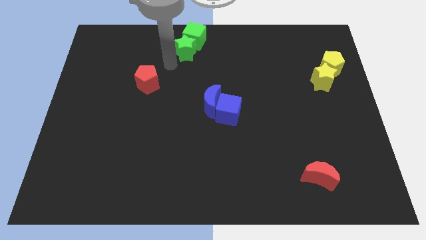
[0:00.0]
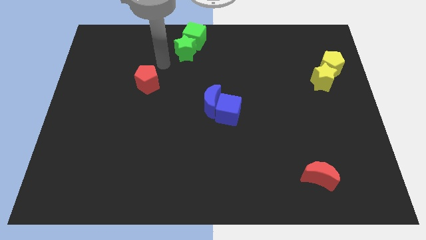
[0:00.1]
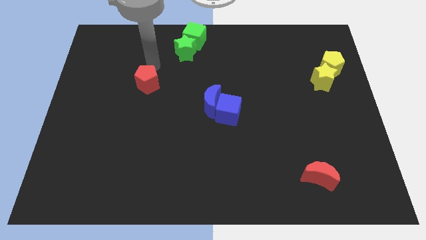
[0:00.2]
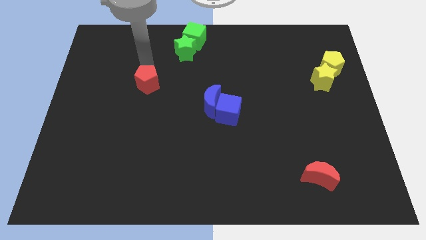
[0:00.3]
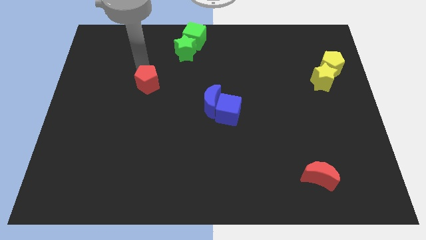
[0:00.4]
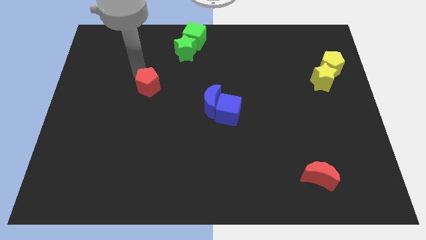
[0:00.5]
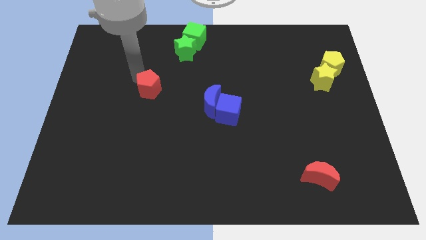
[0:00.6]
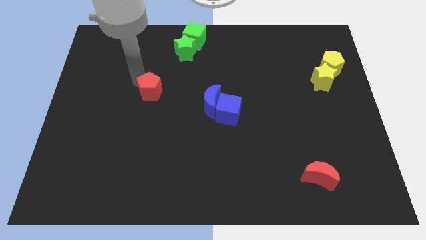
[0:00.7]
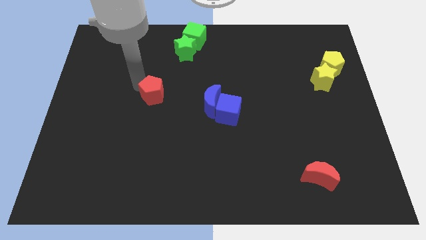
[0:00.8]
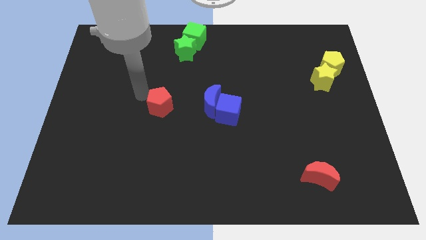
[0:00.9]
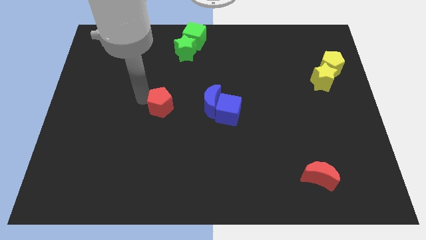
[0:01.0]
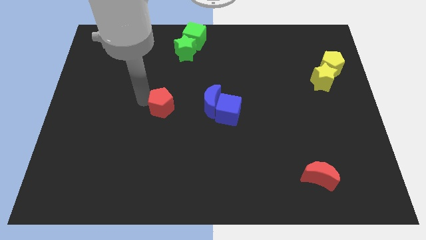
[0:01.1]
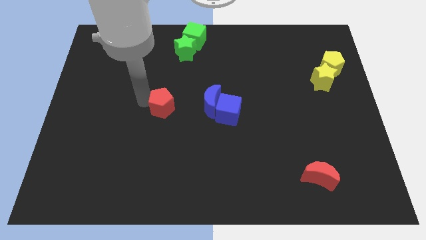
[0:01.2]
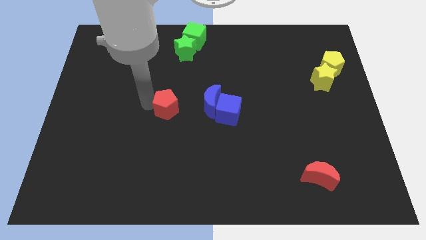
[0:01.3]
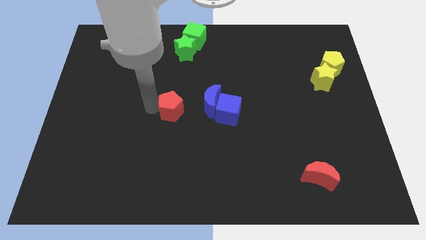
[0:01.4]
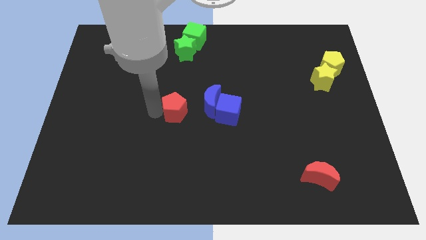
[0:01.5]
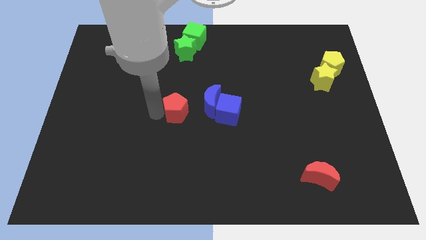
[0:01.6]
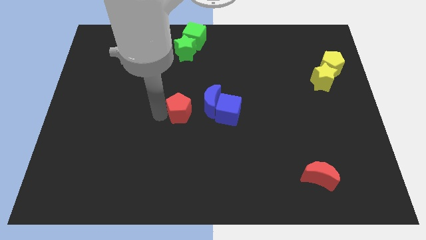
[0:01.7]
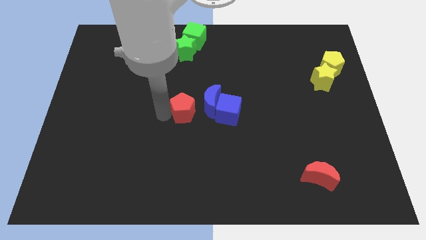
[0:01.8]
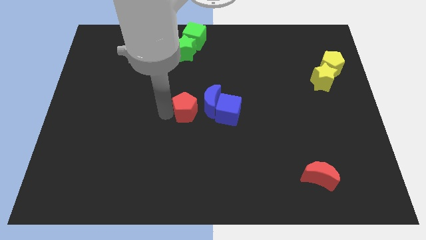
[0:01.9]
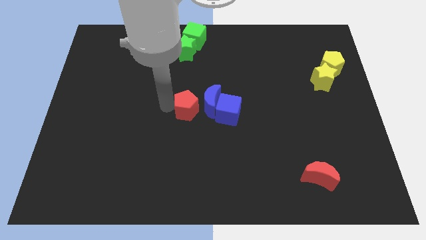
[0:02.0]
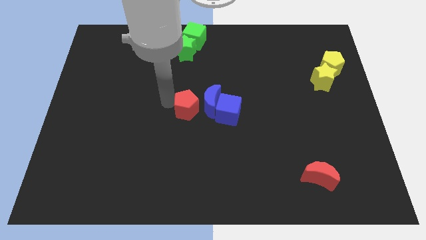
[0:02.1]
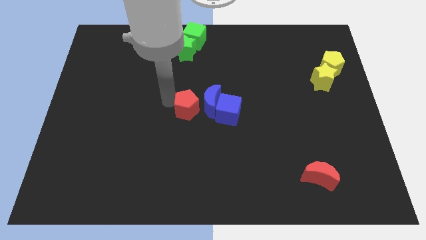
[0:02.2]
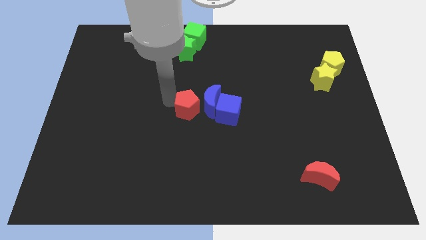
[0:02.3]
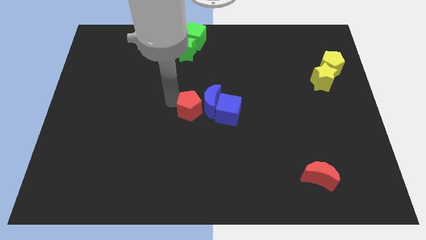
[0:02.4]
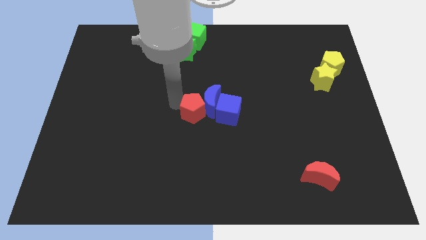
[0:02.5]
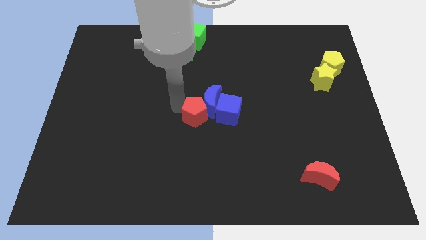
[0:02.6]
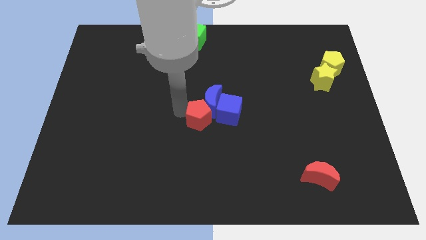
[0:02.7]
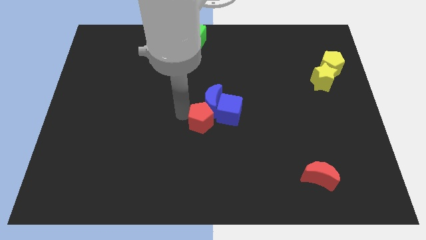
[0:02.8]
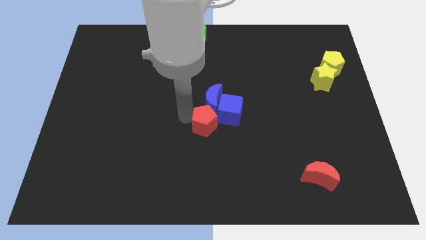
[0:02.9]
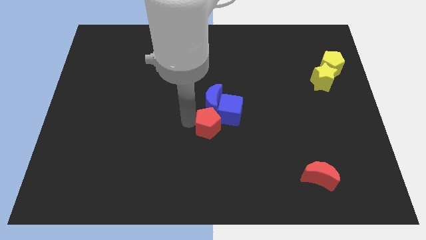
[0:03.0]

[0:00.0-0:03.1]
push red pentagon into blue blocks

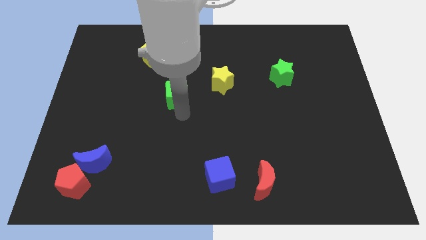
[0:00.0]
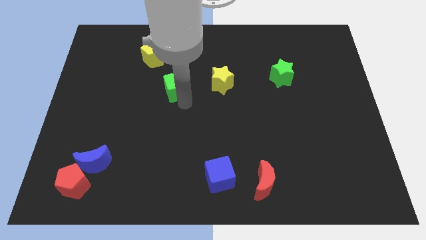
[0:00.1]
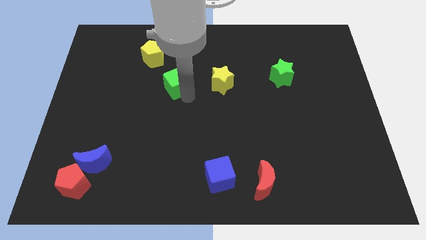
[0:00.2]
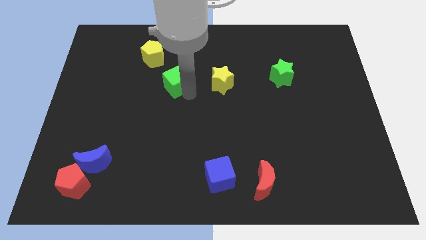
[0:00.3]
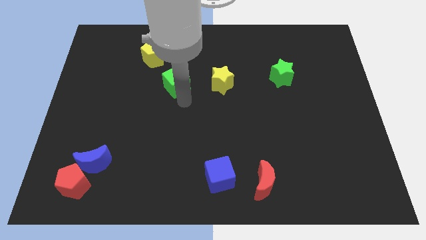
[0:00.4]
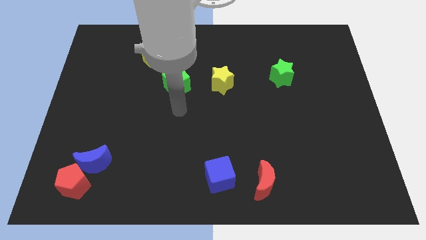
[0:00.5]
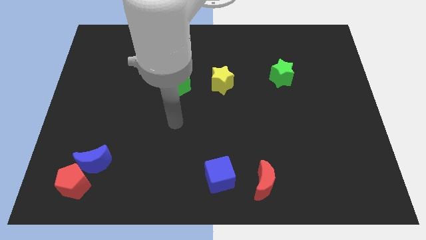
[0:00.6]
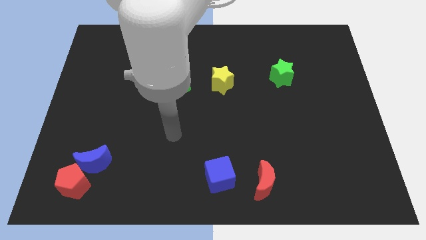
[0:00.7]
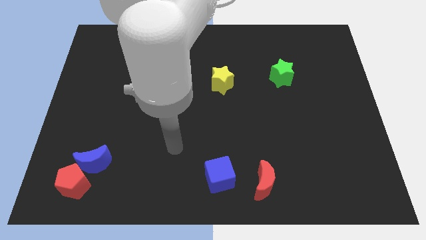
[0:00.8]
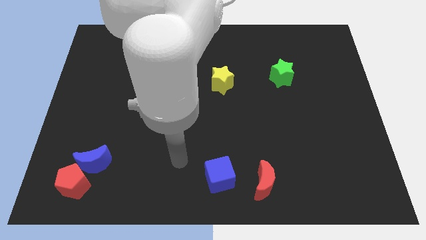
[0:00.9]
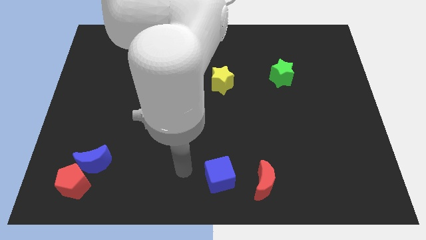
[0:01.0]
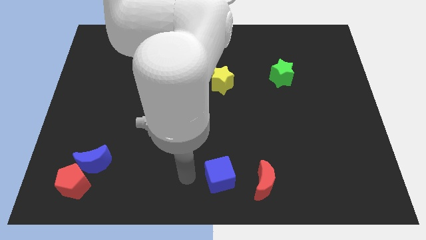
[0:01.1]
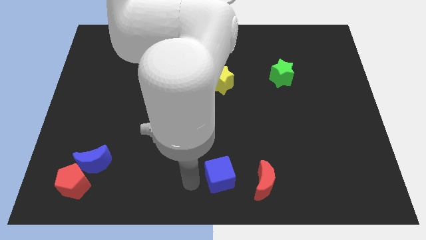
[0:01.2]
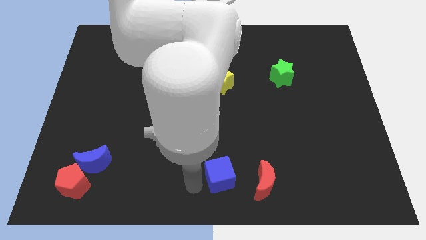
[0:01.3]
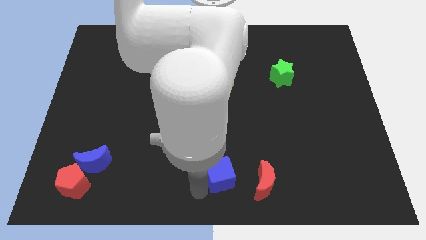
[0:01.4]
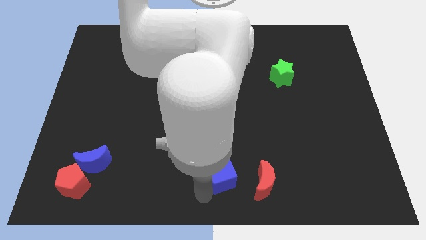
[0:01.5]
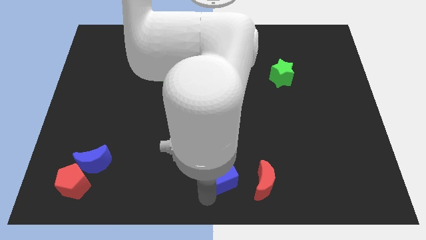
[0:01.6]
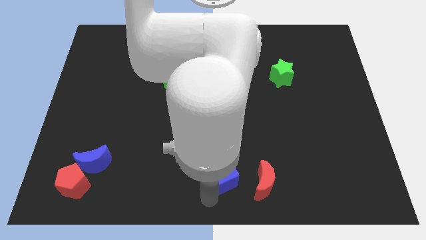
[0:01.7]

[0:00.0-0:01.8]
move the green cube to the left side of the yellow star

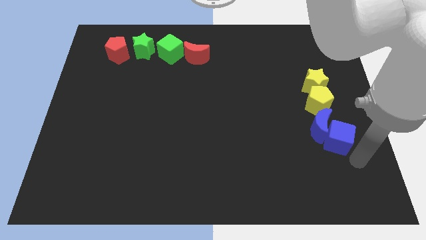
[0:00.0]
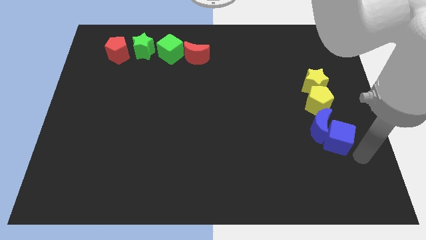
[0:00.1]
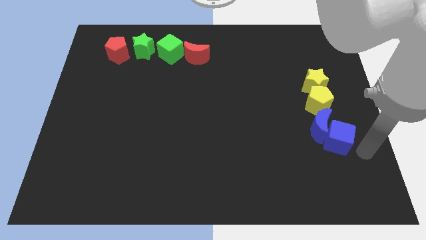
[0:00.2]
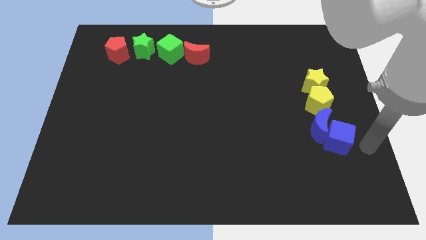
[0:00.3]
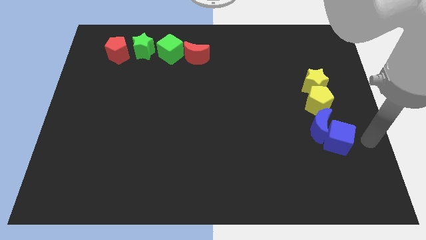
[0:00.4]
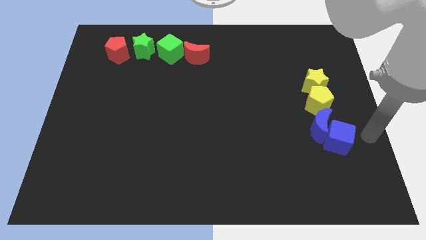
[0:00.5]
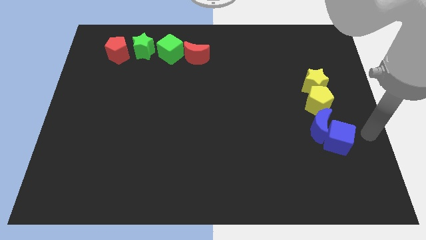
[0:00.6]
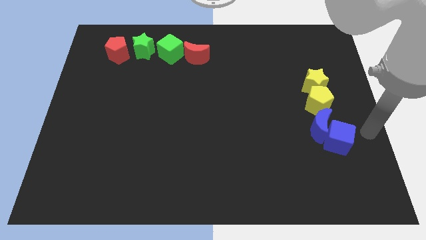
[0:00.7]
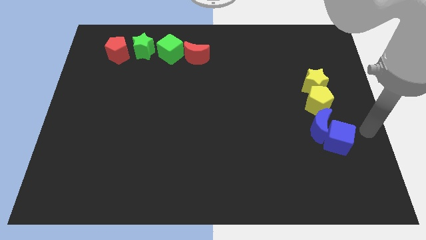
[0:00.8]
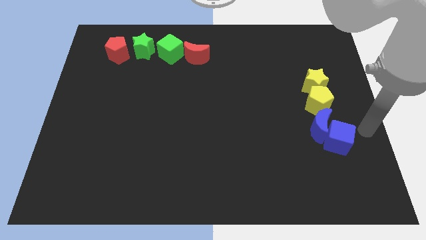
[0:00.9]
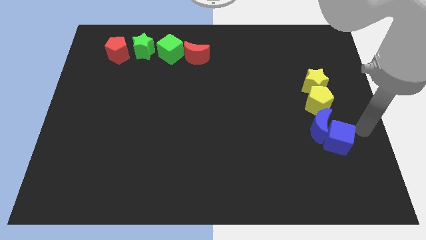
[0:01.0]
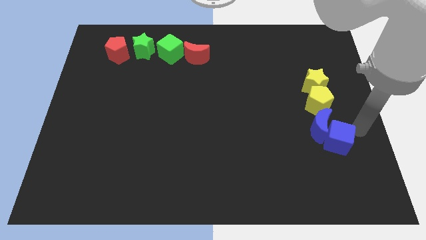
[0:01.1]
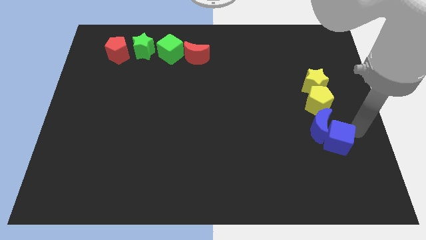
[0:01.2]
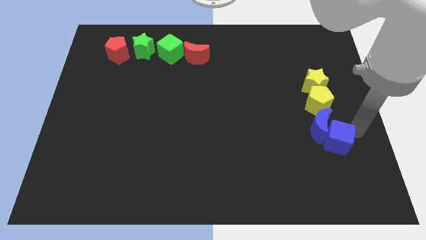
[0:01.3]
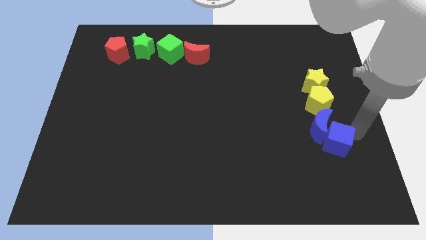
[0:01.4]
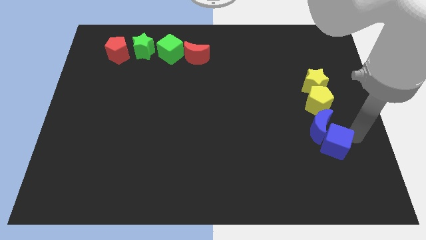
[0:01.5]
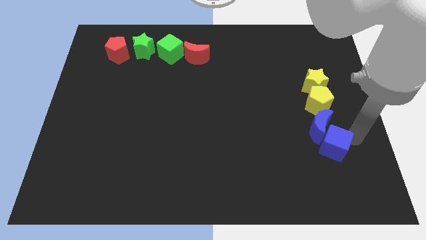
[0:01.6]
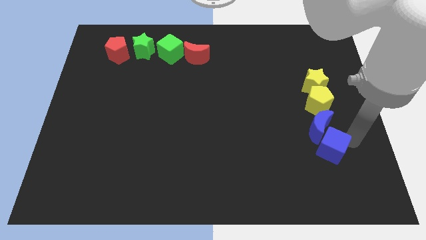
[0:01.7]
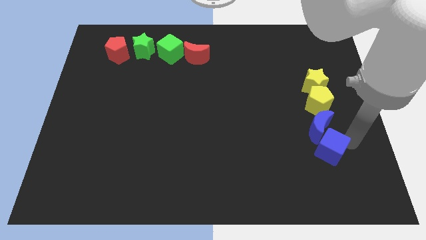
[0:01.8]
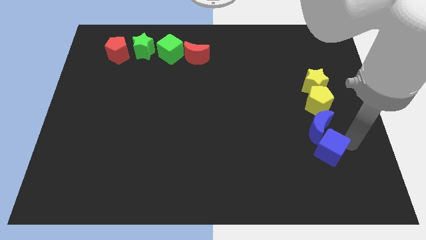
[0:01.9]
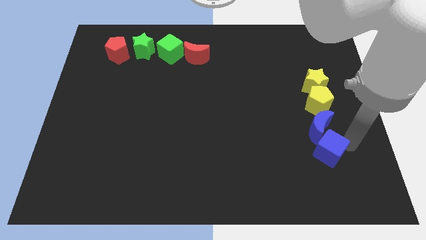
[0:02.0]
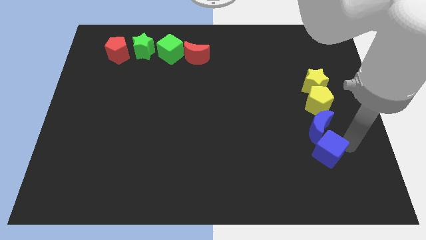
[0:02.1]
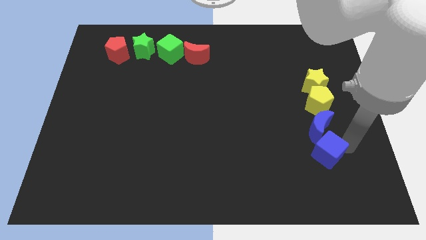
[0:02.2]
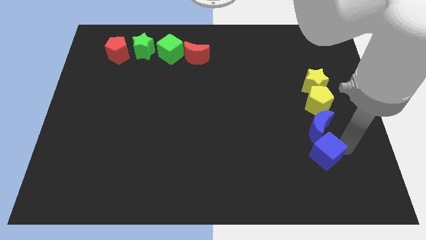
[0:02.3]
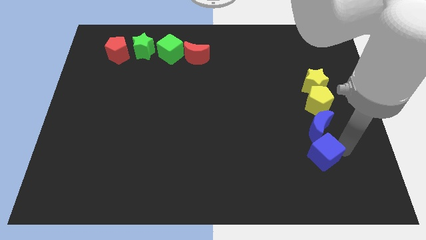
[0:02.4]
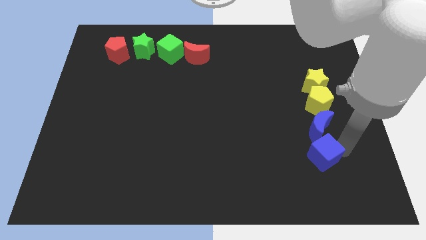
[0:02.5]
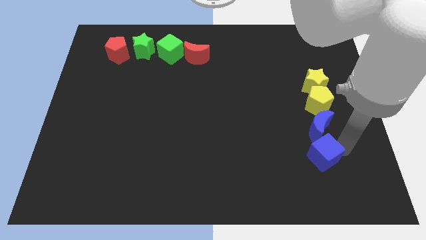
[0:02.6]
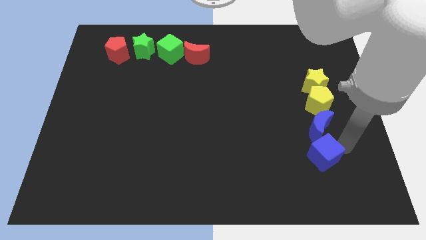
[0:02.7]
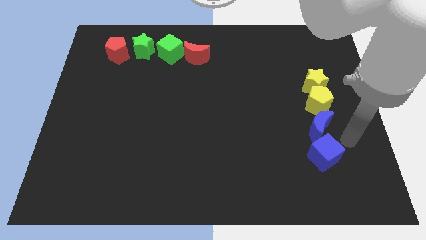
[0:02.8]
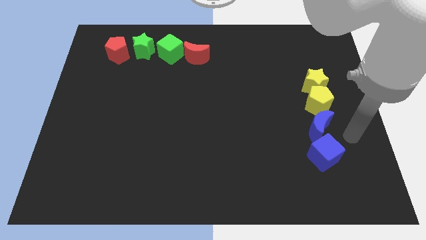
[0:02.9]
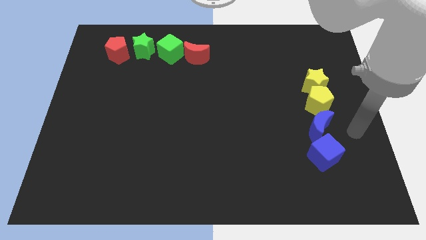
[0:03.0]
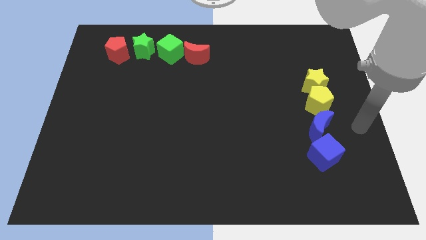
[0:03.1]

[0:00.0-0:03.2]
push the blue cube towards the bottom of the blue crescent

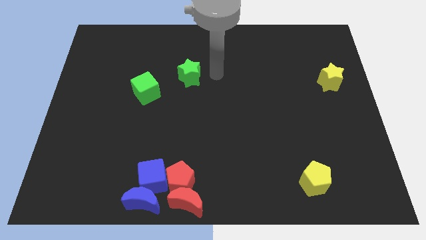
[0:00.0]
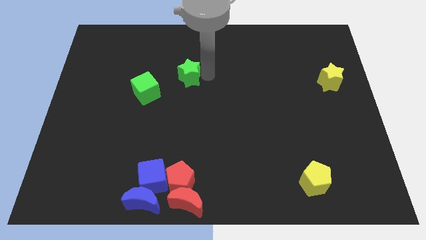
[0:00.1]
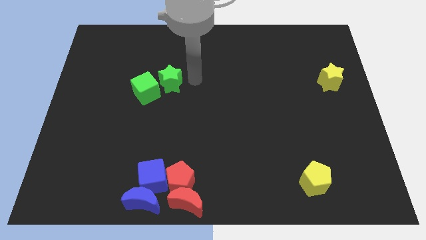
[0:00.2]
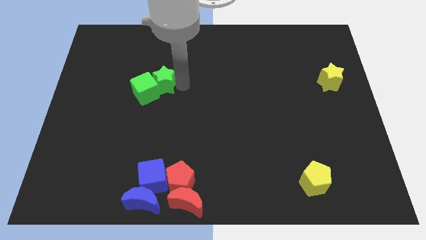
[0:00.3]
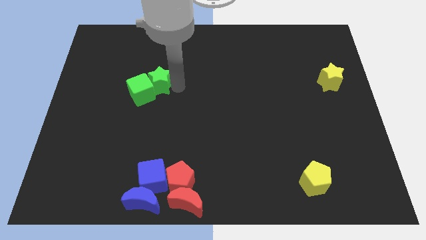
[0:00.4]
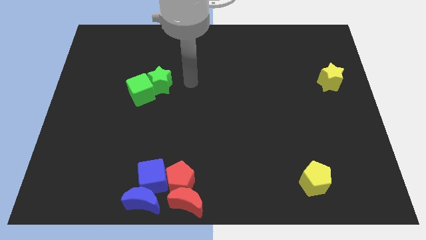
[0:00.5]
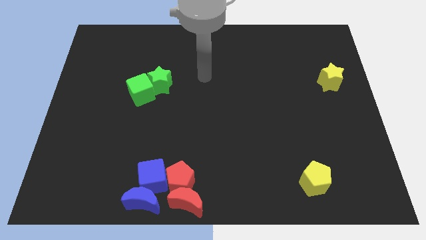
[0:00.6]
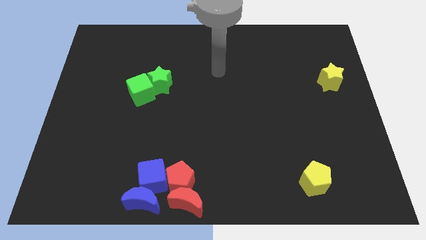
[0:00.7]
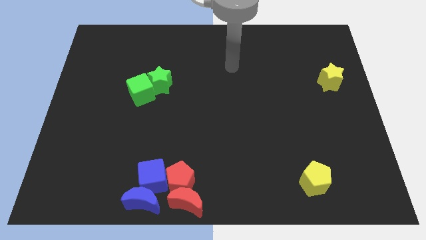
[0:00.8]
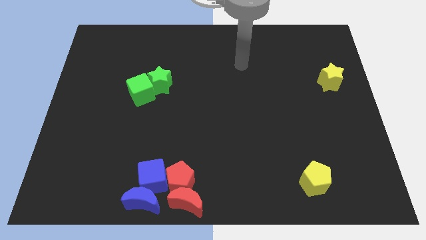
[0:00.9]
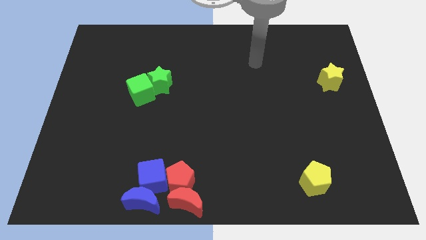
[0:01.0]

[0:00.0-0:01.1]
push the green star into green cube
